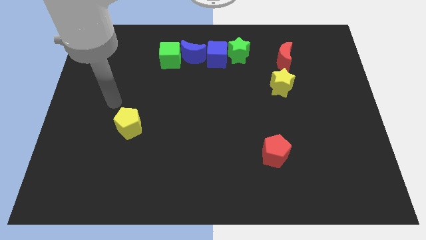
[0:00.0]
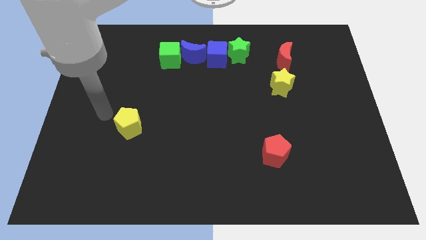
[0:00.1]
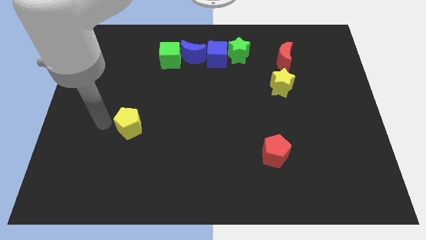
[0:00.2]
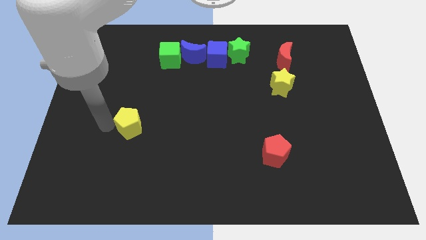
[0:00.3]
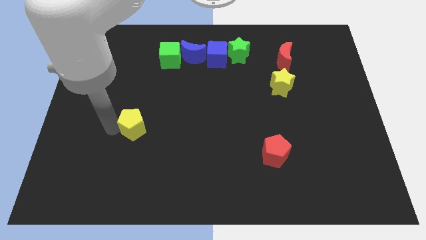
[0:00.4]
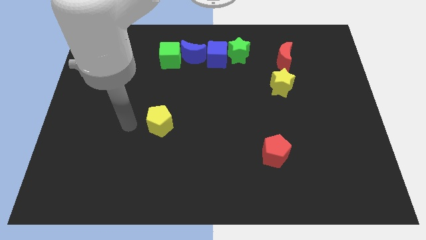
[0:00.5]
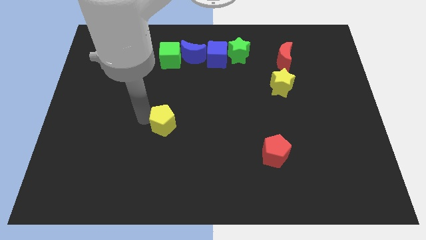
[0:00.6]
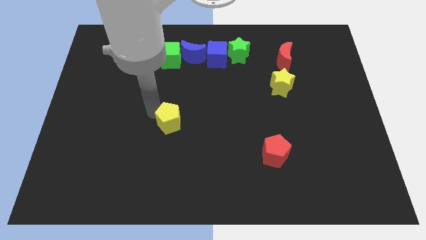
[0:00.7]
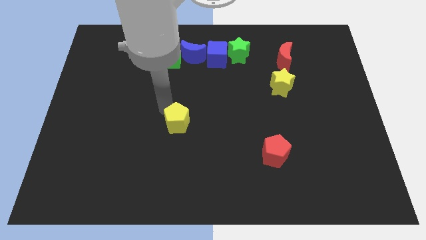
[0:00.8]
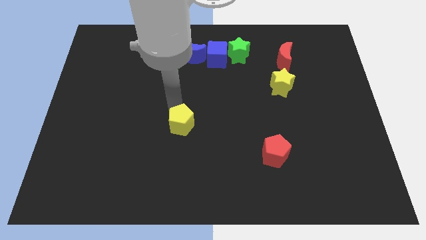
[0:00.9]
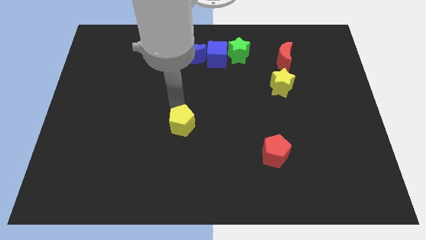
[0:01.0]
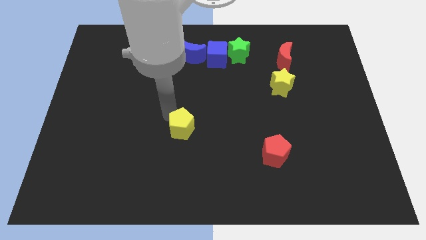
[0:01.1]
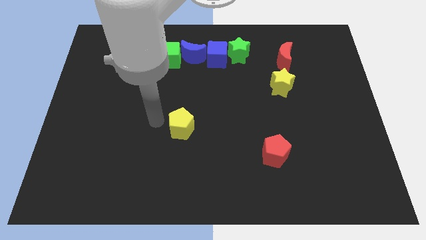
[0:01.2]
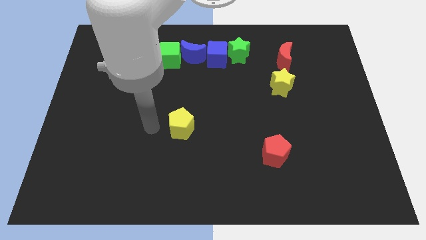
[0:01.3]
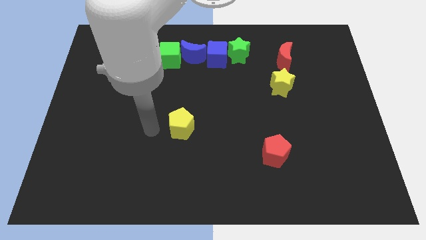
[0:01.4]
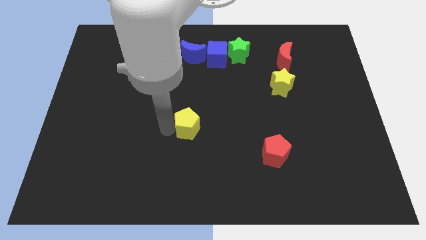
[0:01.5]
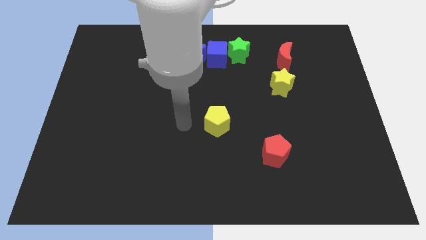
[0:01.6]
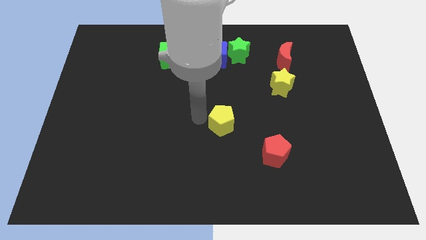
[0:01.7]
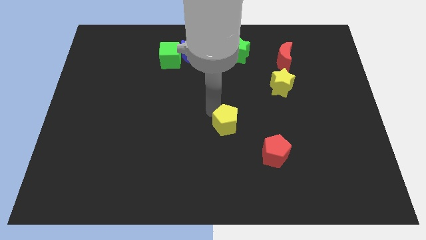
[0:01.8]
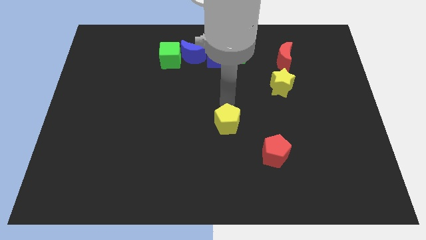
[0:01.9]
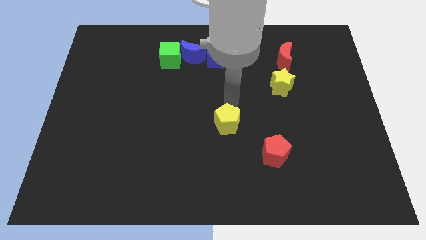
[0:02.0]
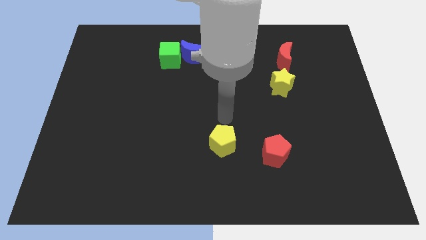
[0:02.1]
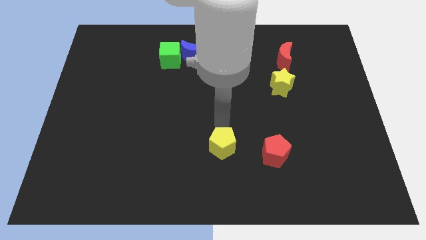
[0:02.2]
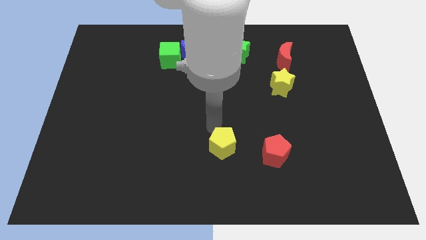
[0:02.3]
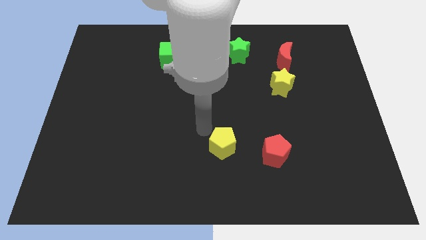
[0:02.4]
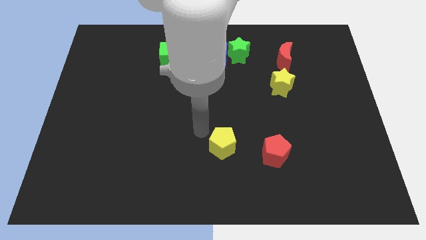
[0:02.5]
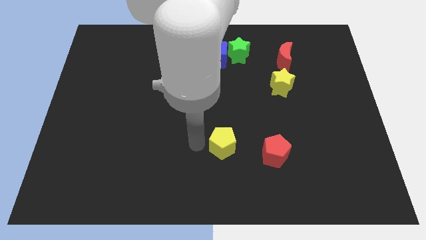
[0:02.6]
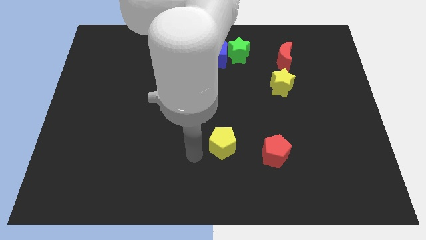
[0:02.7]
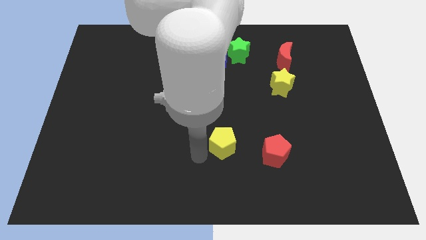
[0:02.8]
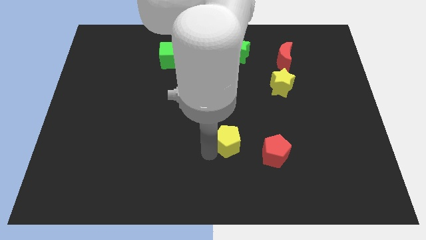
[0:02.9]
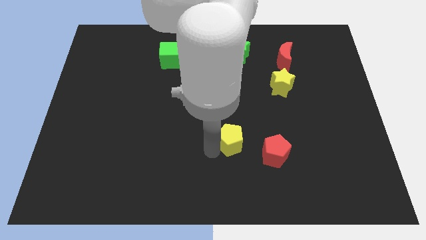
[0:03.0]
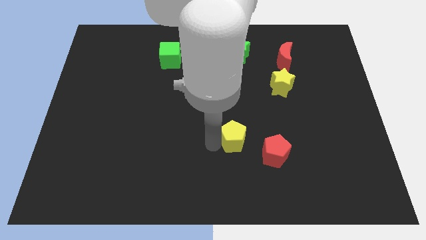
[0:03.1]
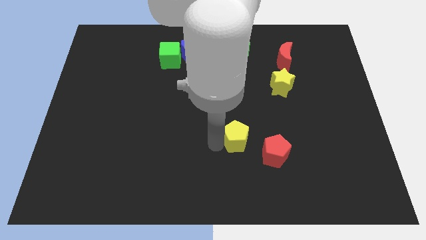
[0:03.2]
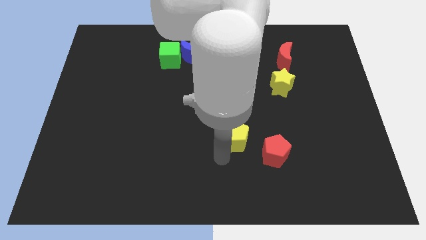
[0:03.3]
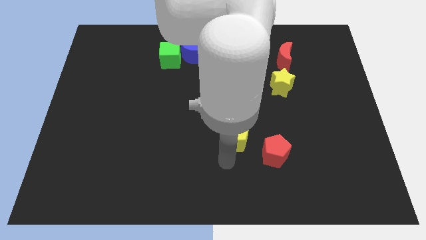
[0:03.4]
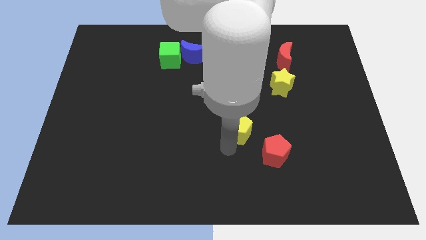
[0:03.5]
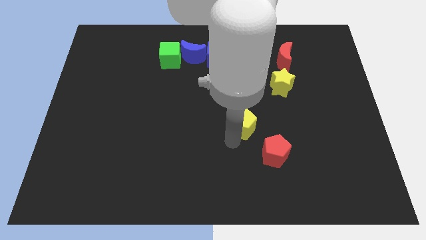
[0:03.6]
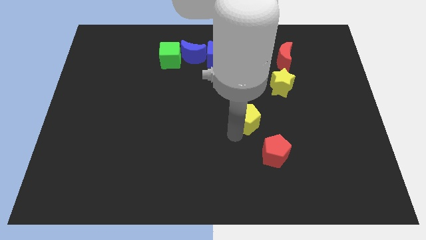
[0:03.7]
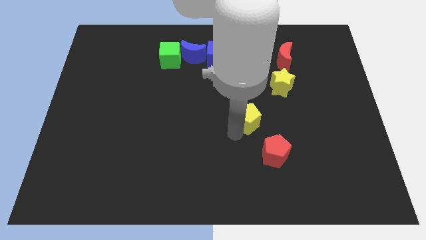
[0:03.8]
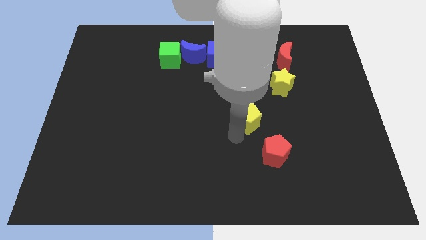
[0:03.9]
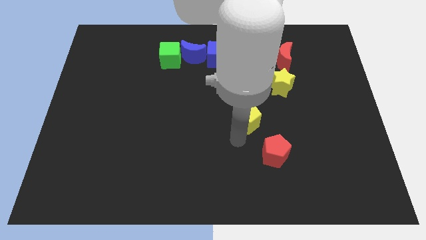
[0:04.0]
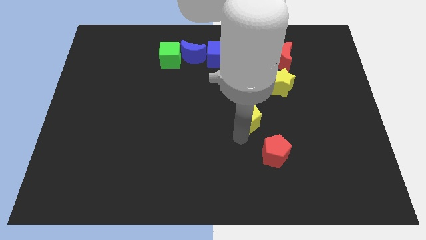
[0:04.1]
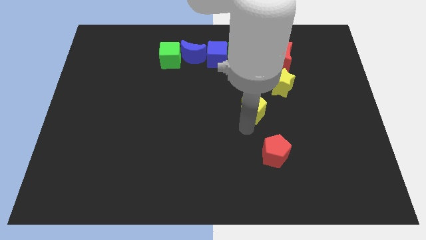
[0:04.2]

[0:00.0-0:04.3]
push the yellow pentagon towards the yellow star

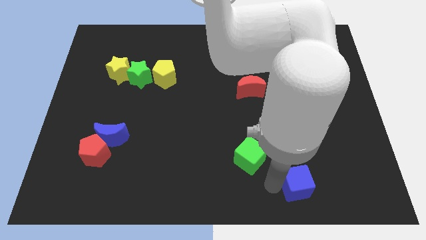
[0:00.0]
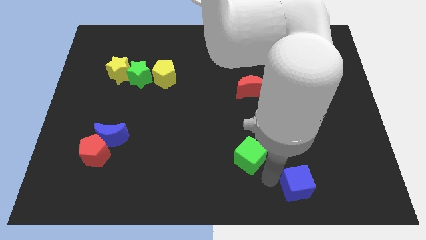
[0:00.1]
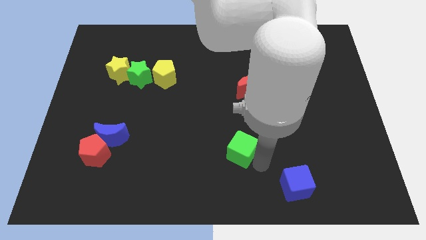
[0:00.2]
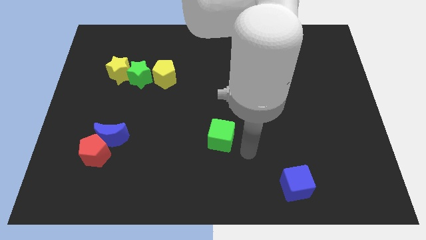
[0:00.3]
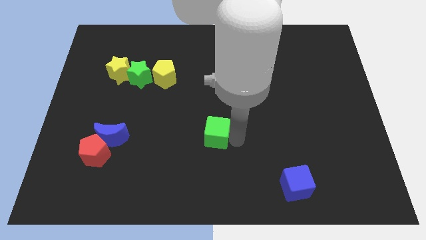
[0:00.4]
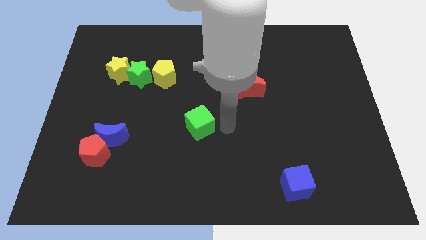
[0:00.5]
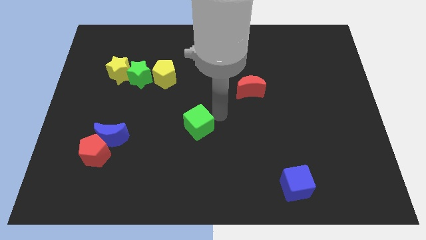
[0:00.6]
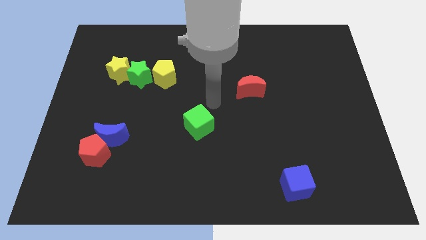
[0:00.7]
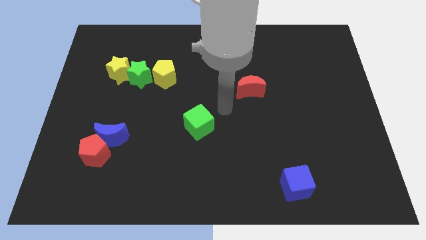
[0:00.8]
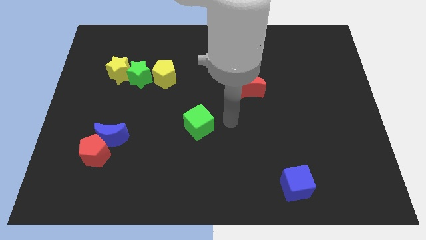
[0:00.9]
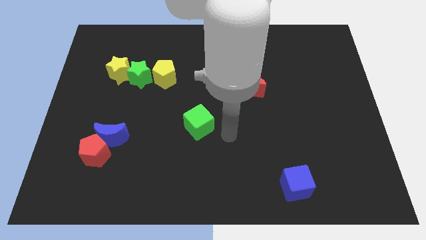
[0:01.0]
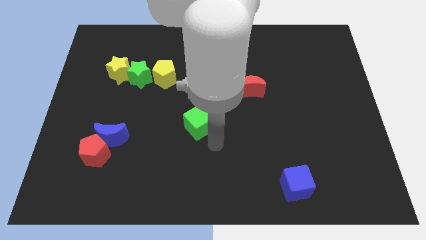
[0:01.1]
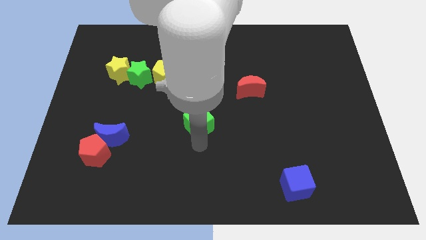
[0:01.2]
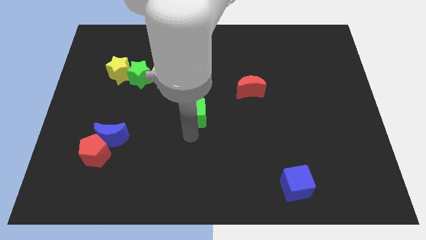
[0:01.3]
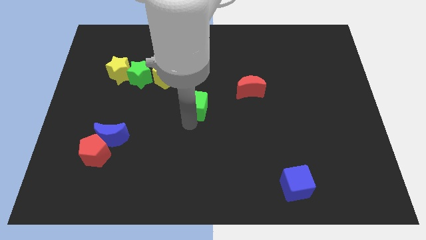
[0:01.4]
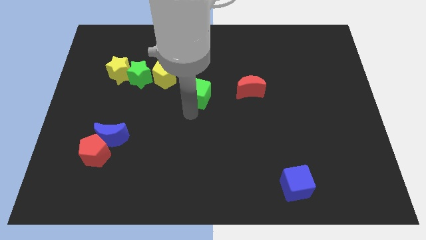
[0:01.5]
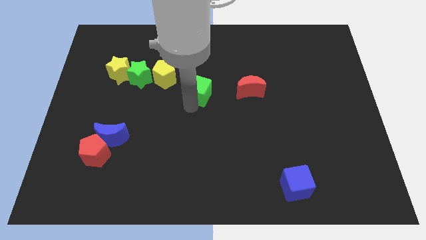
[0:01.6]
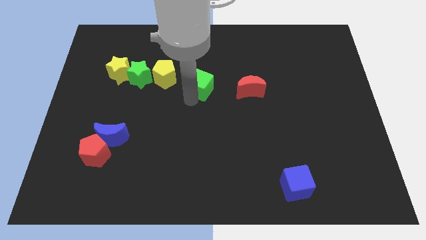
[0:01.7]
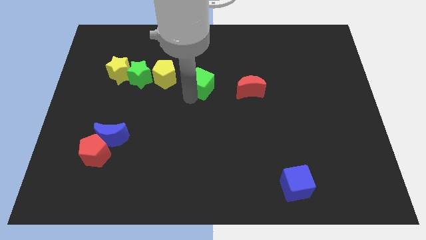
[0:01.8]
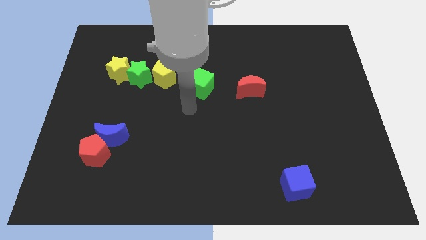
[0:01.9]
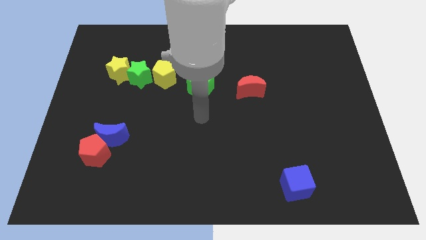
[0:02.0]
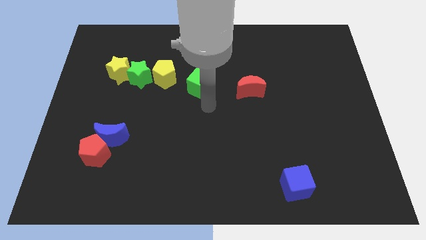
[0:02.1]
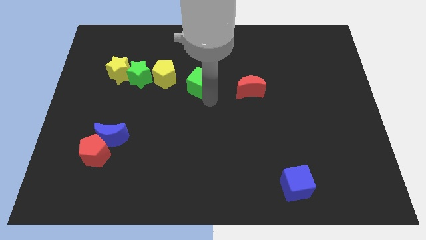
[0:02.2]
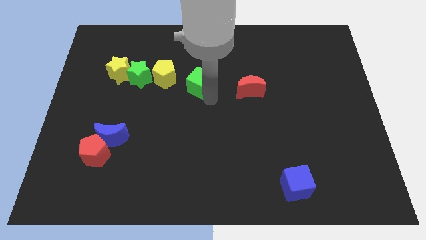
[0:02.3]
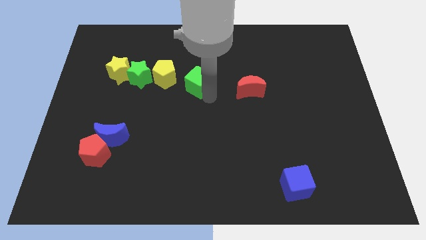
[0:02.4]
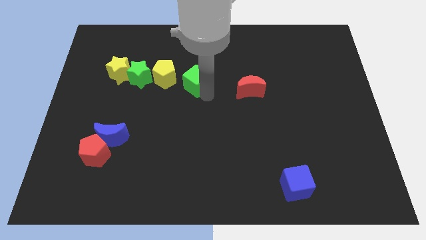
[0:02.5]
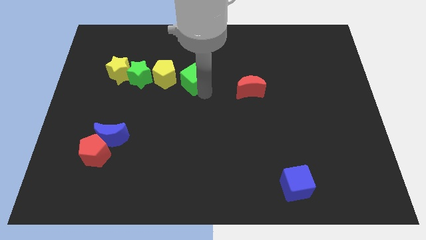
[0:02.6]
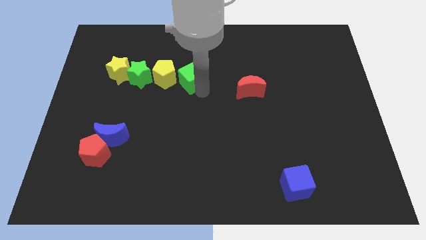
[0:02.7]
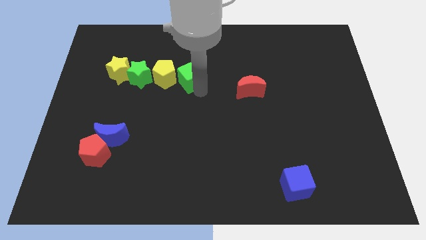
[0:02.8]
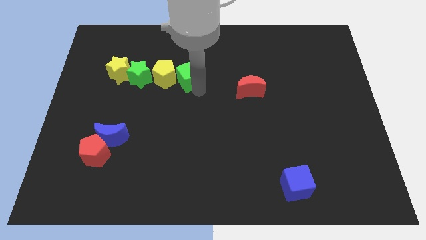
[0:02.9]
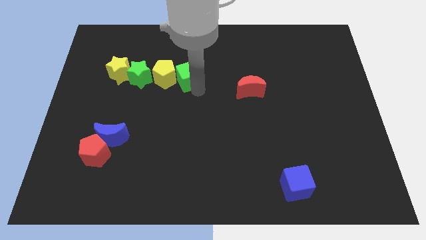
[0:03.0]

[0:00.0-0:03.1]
place the green cube right to the yellow pentagon

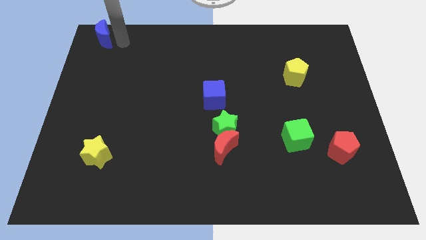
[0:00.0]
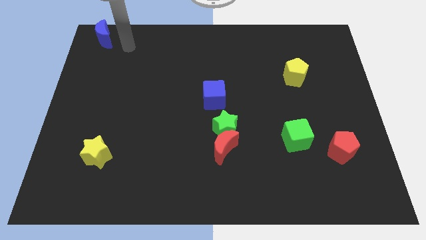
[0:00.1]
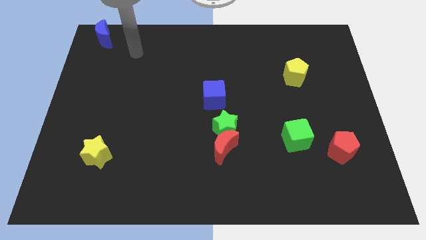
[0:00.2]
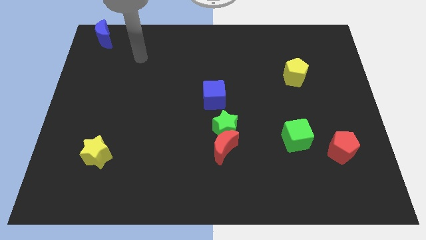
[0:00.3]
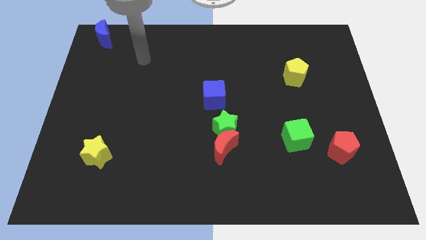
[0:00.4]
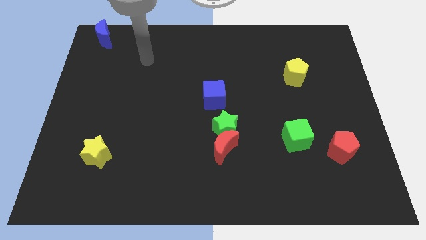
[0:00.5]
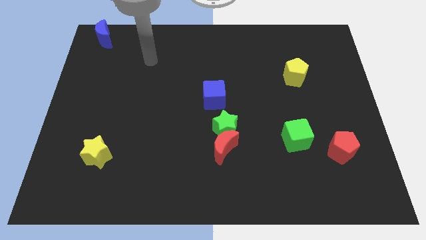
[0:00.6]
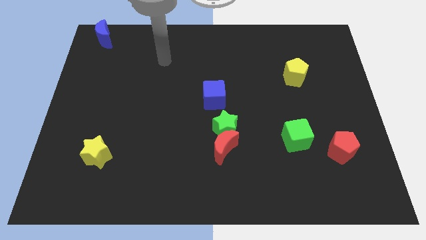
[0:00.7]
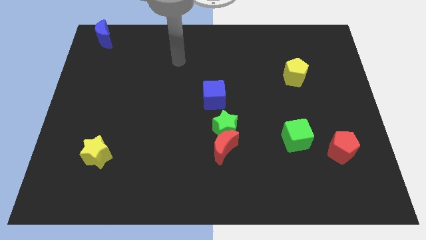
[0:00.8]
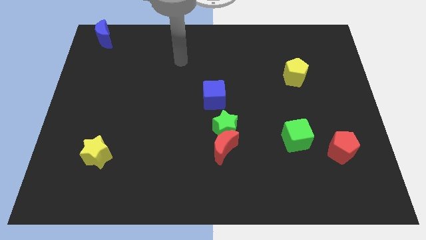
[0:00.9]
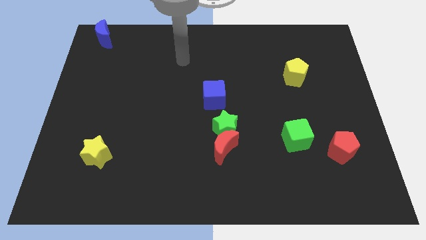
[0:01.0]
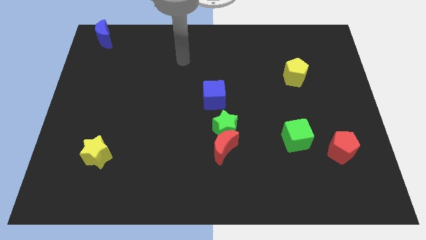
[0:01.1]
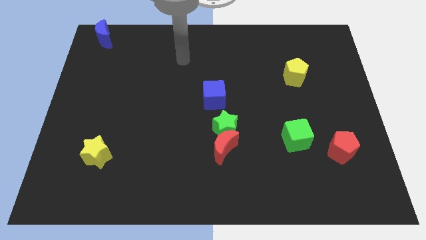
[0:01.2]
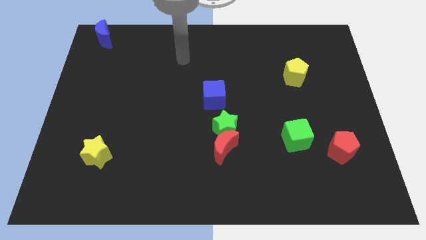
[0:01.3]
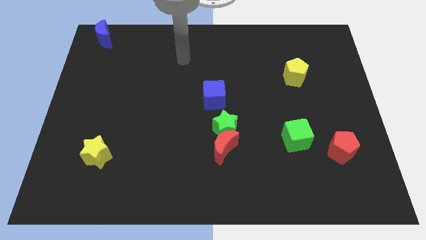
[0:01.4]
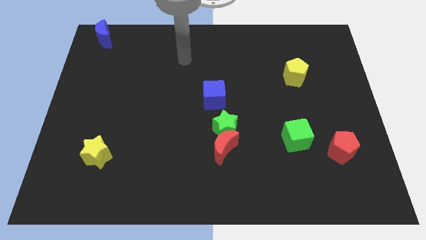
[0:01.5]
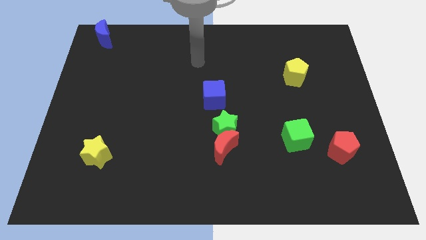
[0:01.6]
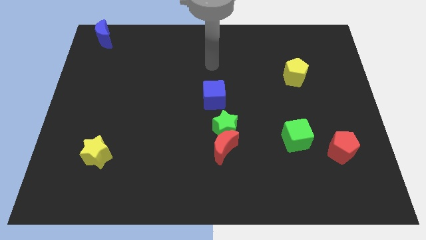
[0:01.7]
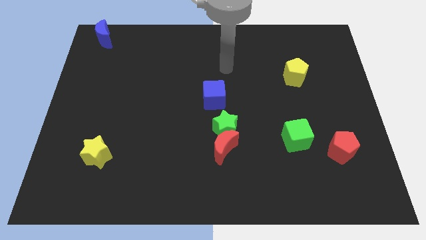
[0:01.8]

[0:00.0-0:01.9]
move yourself away from the blue moon
